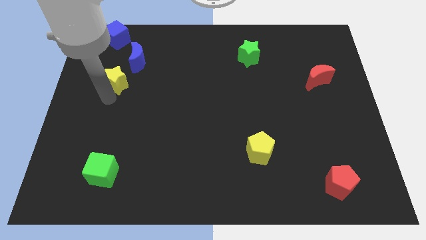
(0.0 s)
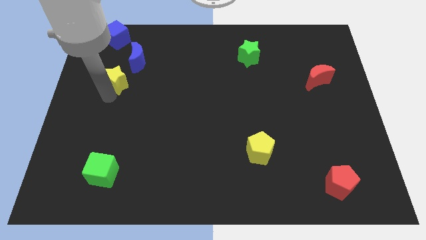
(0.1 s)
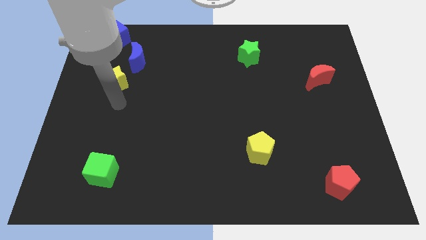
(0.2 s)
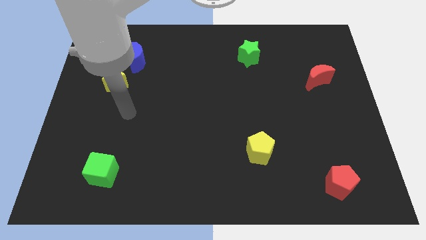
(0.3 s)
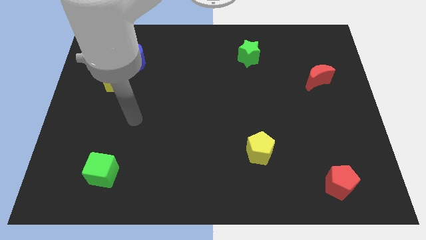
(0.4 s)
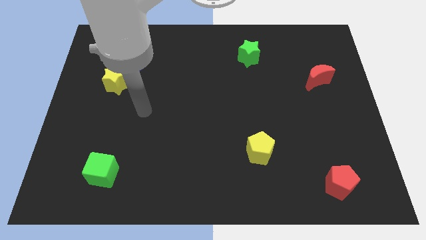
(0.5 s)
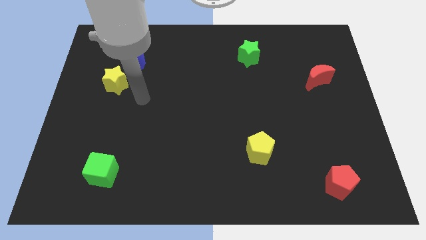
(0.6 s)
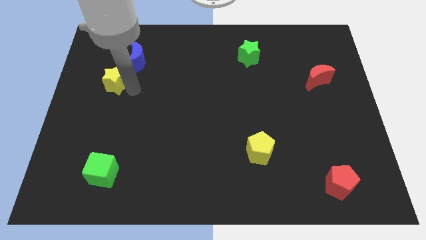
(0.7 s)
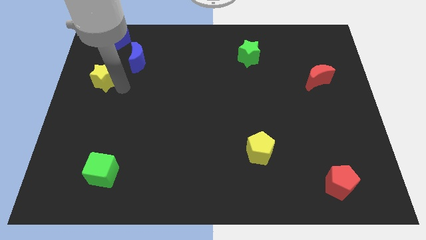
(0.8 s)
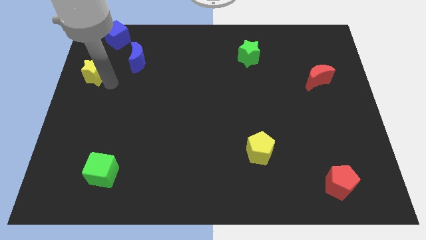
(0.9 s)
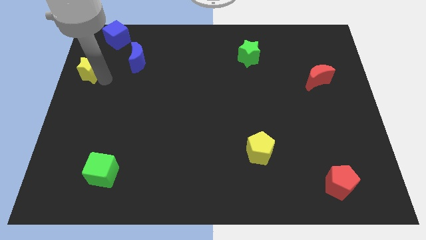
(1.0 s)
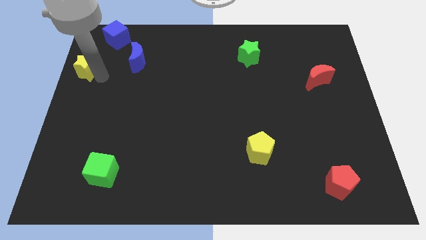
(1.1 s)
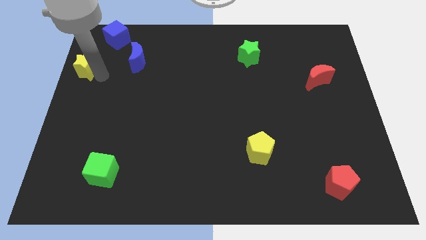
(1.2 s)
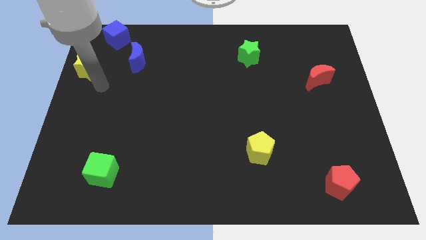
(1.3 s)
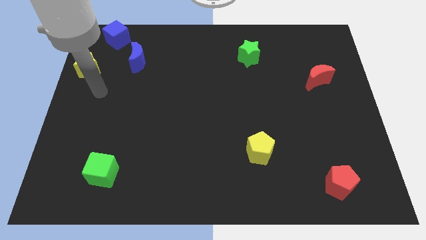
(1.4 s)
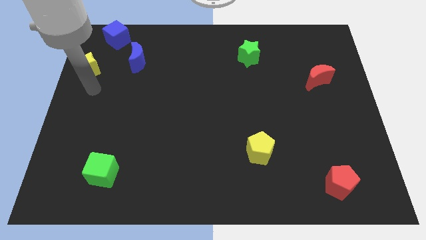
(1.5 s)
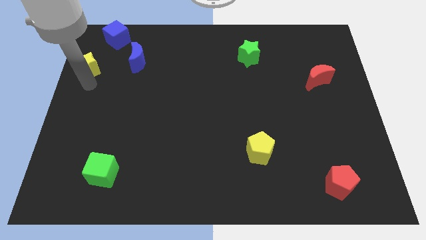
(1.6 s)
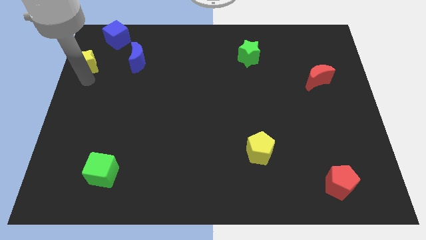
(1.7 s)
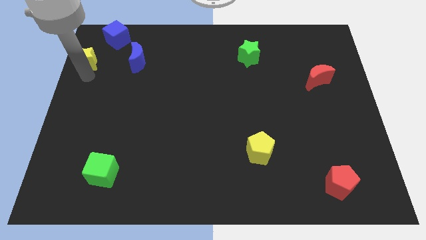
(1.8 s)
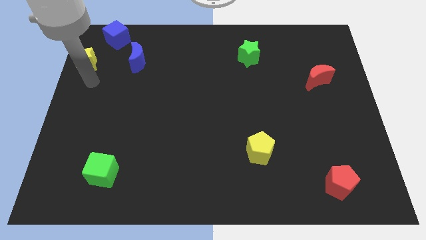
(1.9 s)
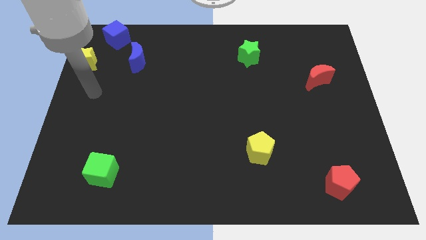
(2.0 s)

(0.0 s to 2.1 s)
push yellow star to the left of blue moon

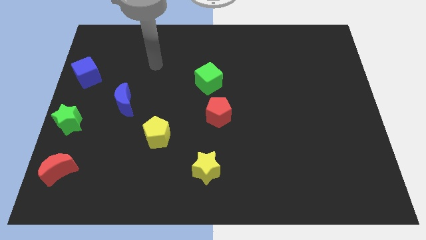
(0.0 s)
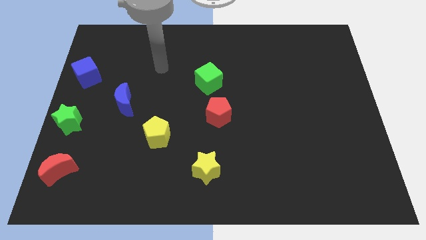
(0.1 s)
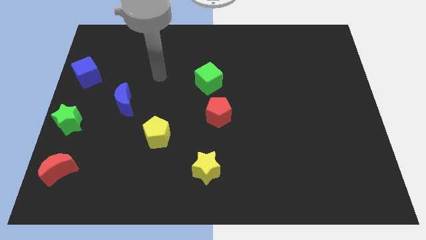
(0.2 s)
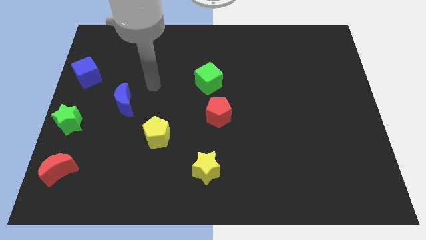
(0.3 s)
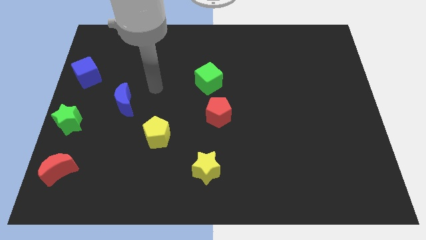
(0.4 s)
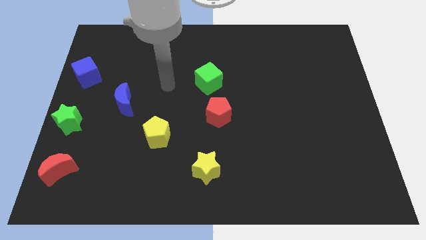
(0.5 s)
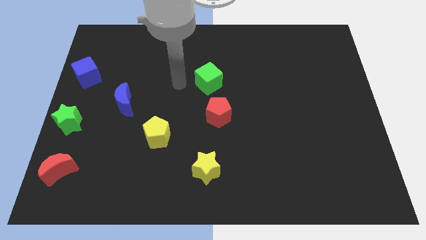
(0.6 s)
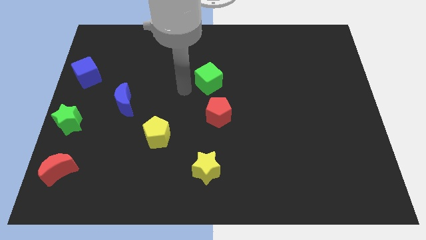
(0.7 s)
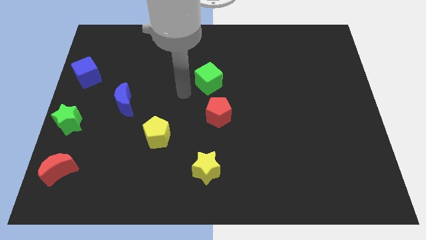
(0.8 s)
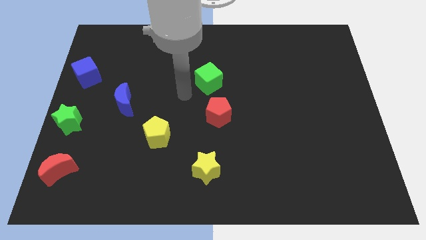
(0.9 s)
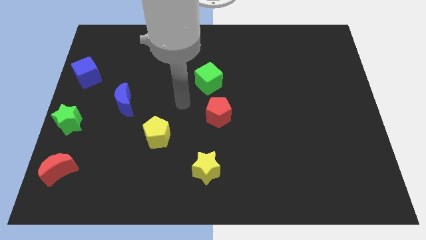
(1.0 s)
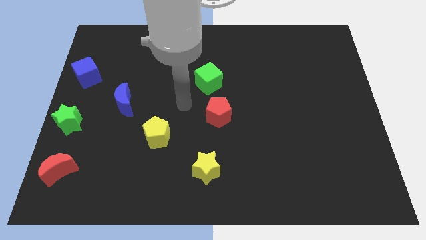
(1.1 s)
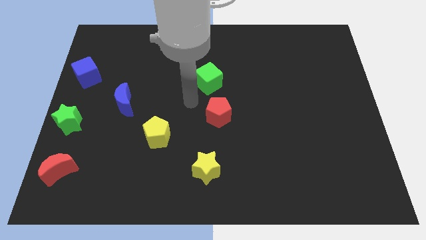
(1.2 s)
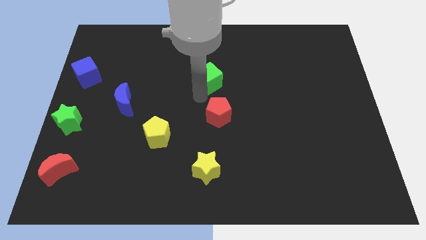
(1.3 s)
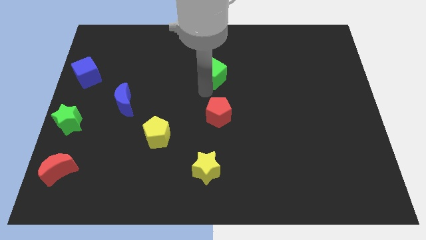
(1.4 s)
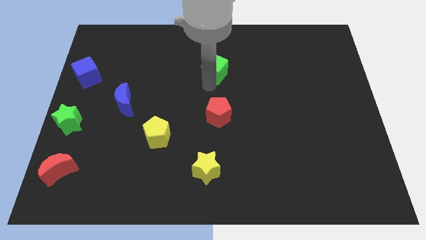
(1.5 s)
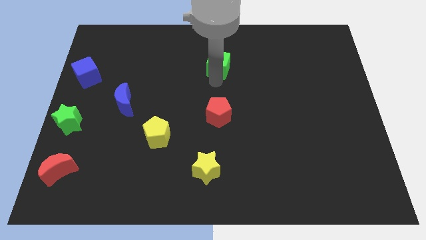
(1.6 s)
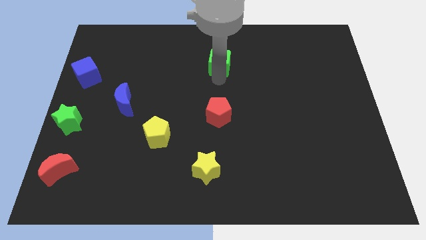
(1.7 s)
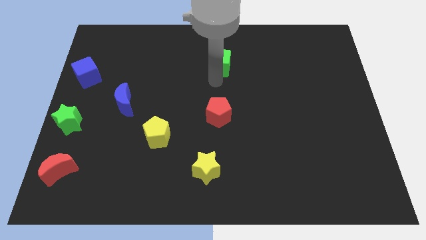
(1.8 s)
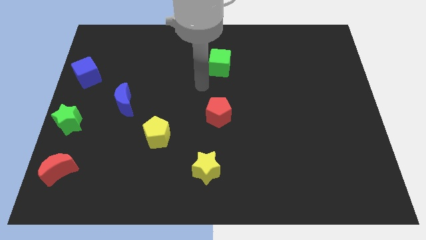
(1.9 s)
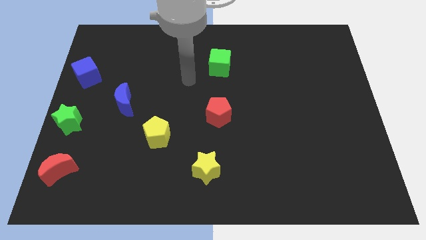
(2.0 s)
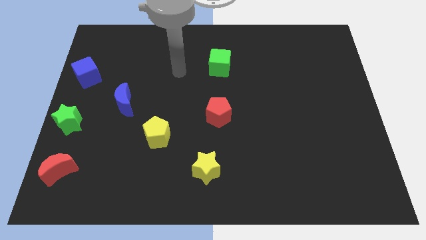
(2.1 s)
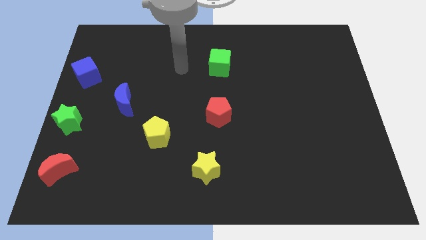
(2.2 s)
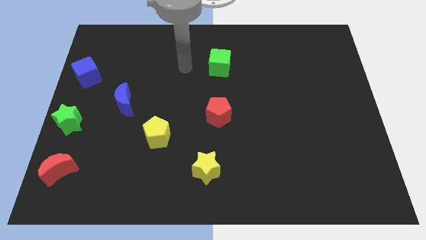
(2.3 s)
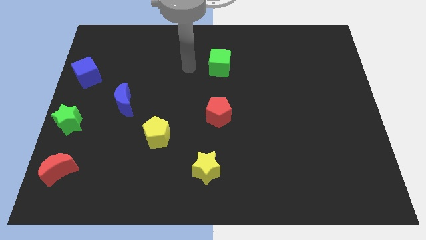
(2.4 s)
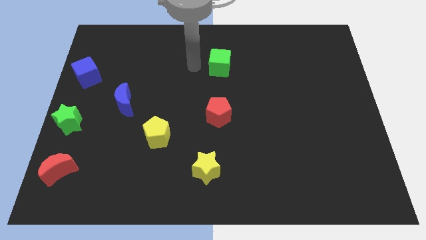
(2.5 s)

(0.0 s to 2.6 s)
place the green cube vertical parallel to the red pentagon

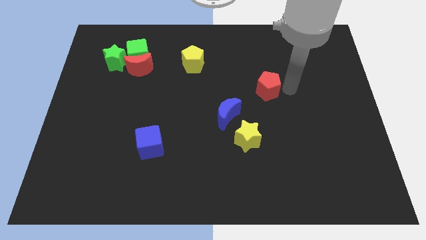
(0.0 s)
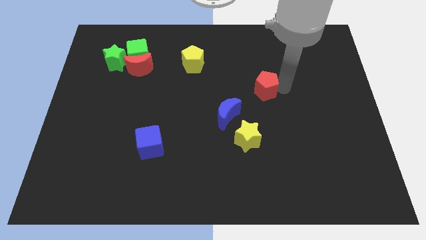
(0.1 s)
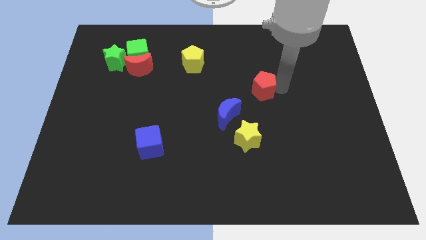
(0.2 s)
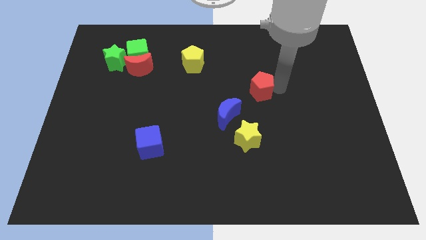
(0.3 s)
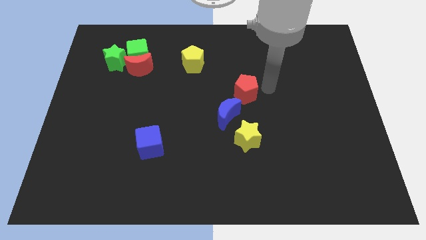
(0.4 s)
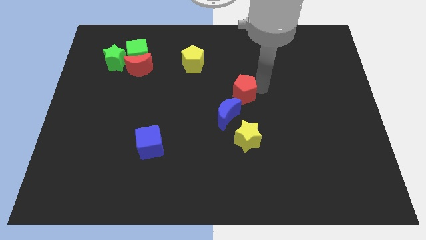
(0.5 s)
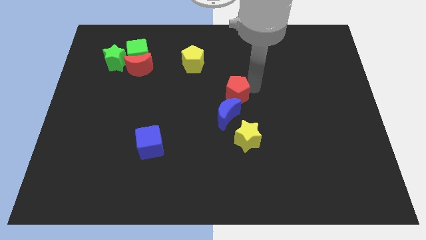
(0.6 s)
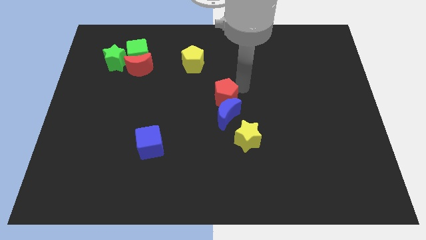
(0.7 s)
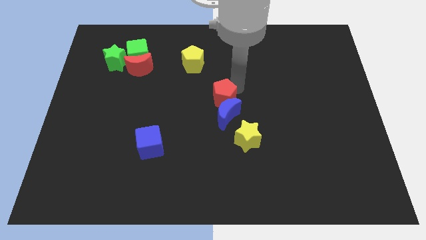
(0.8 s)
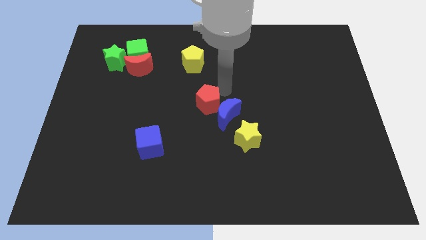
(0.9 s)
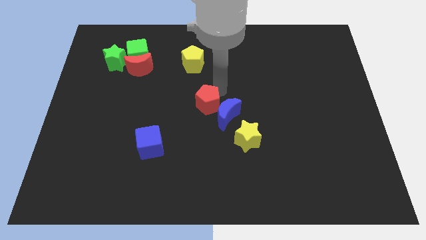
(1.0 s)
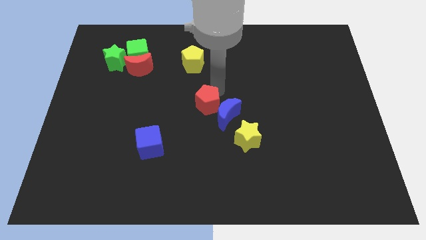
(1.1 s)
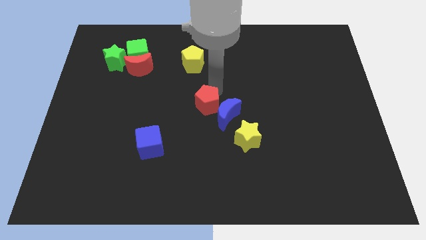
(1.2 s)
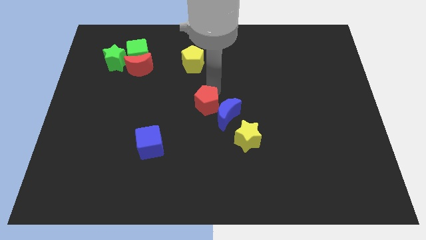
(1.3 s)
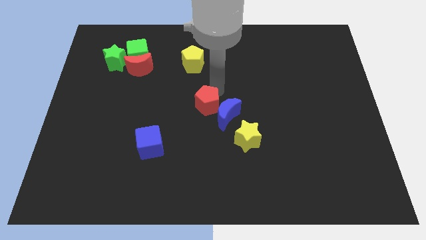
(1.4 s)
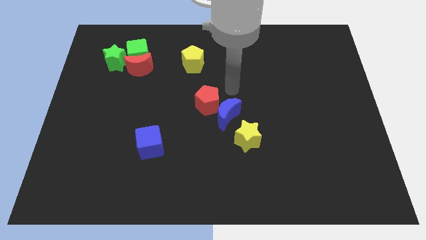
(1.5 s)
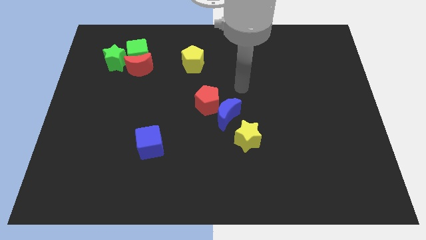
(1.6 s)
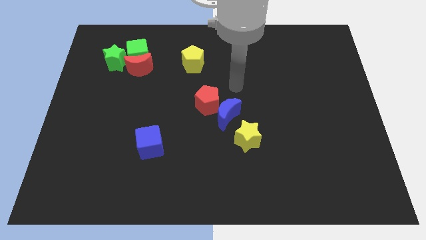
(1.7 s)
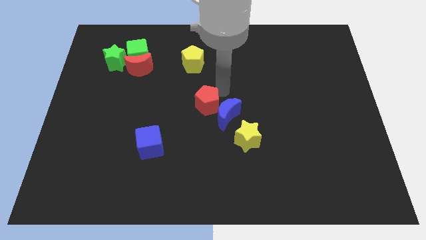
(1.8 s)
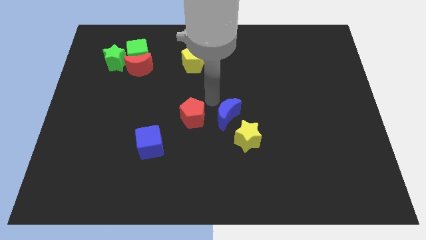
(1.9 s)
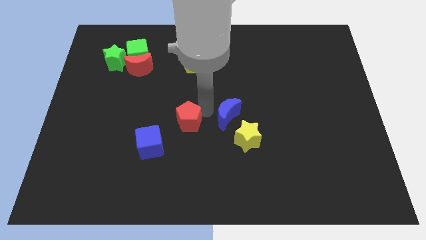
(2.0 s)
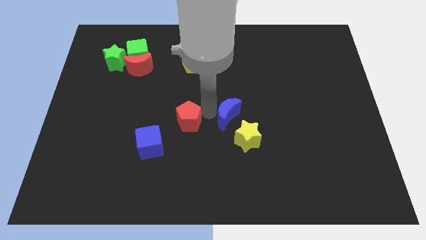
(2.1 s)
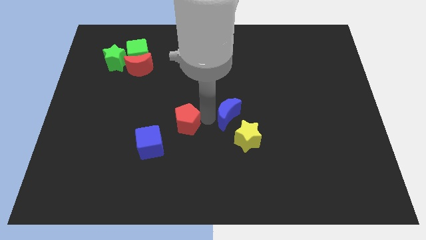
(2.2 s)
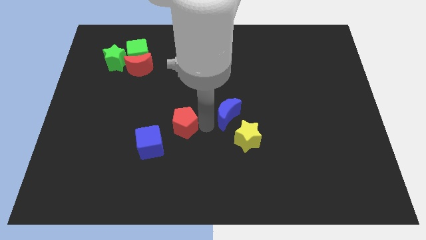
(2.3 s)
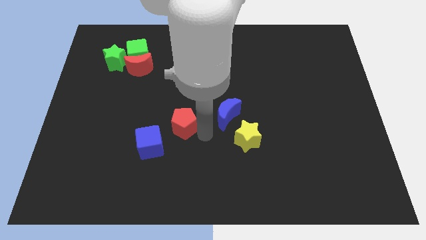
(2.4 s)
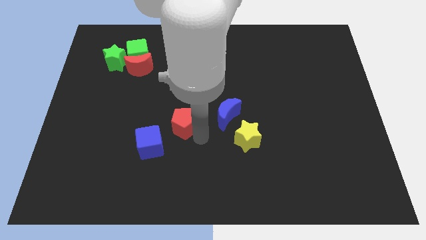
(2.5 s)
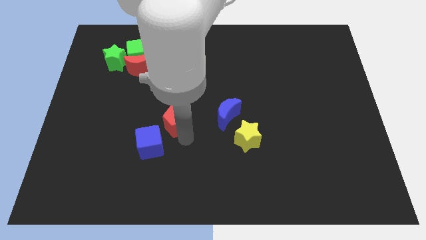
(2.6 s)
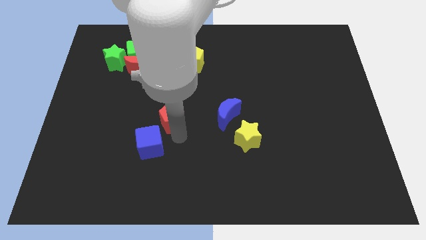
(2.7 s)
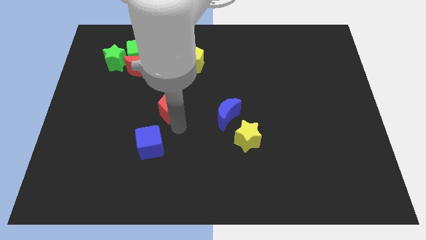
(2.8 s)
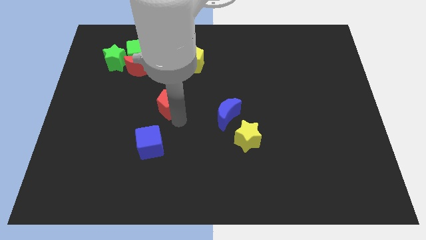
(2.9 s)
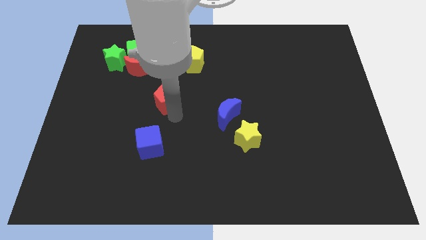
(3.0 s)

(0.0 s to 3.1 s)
place the red pentagon between the yellow pentagon and blue cube

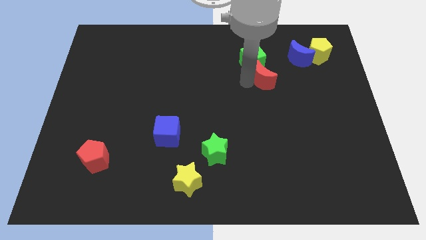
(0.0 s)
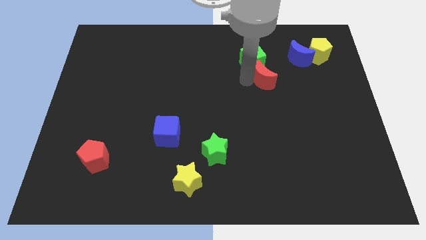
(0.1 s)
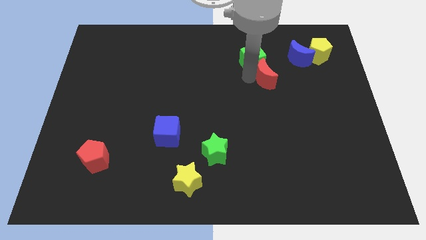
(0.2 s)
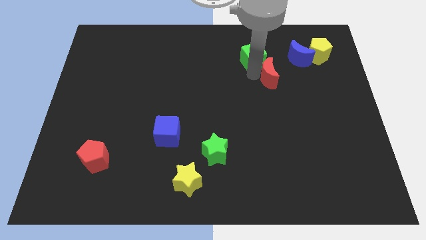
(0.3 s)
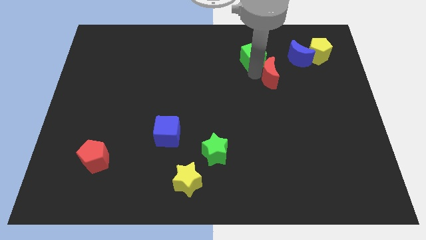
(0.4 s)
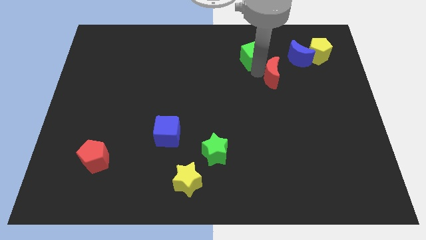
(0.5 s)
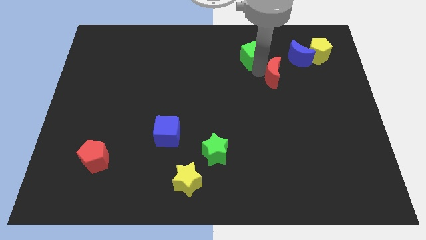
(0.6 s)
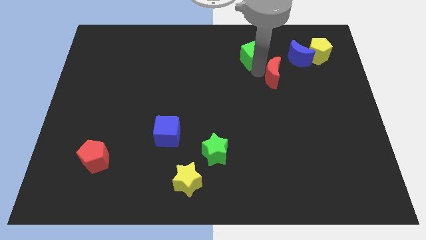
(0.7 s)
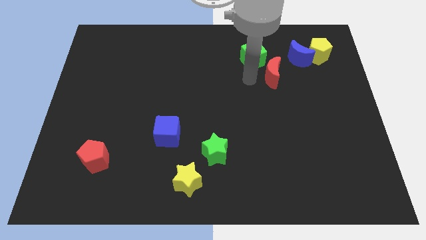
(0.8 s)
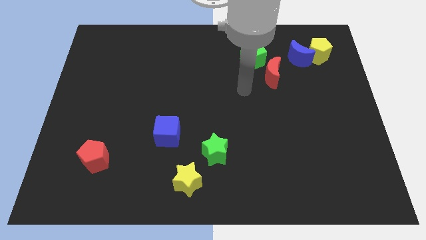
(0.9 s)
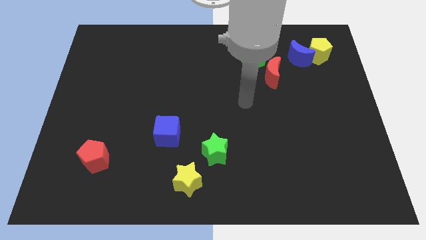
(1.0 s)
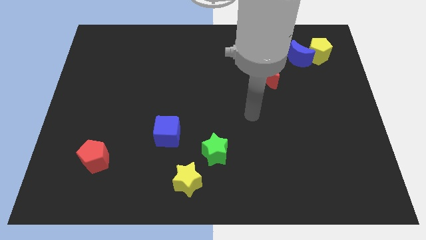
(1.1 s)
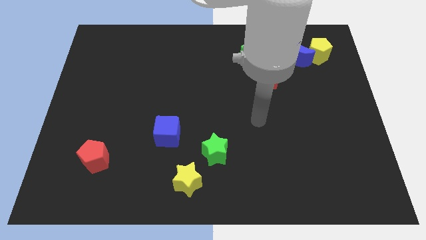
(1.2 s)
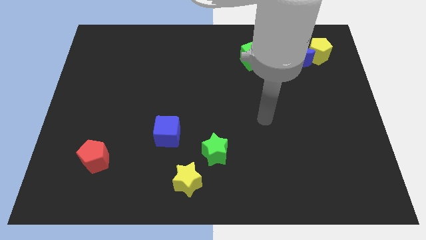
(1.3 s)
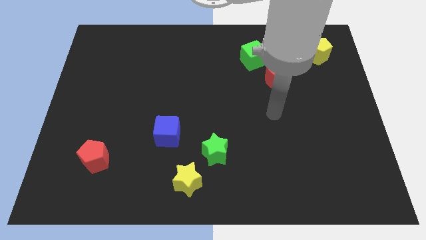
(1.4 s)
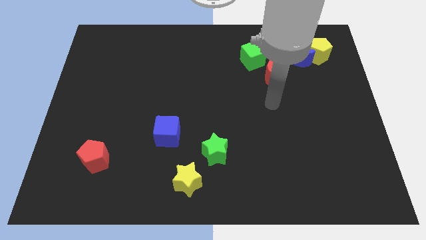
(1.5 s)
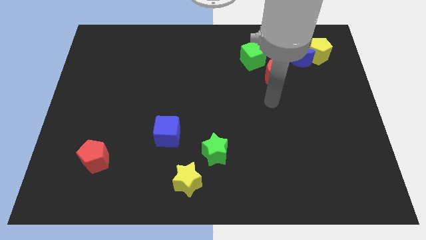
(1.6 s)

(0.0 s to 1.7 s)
move the red moon between the green cube and blue crescent
